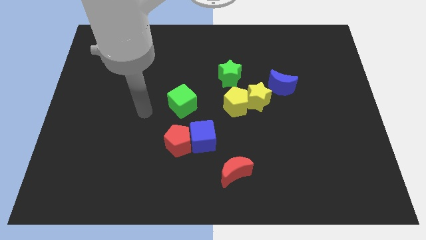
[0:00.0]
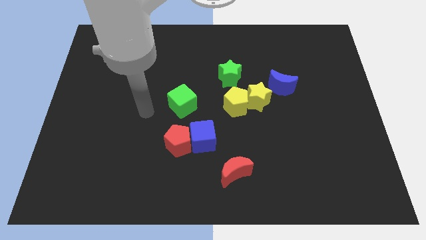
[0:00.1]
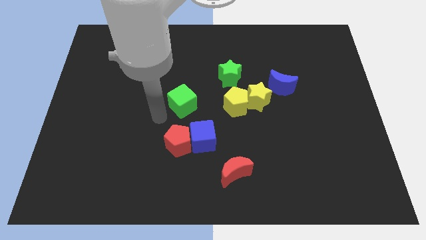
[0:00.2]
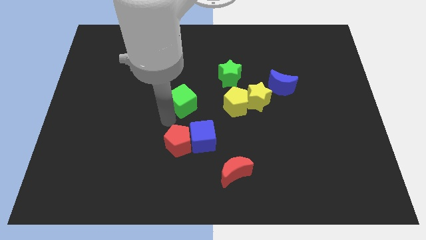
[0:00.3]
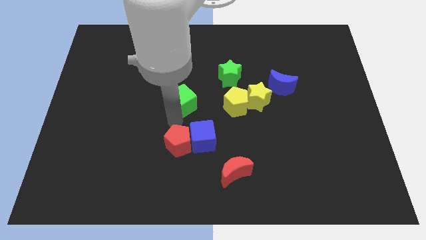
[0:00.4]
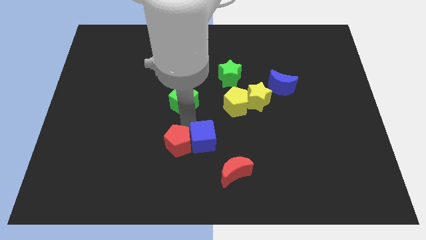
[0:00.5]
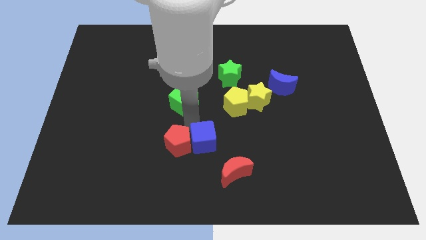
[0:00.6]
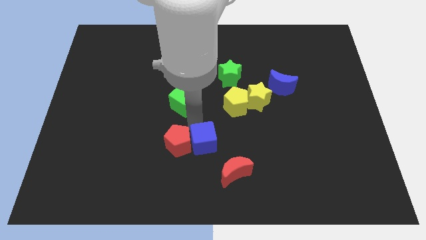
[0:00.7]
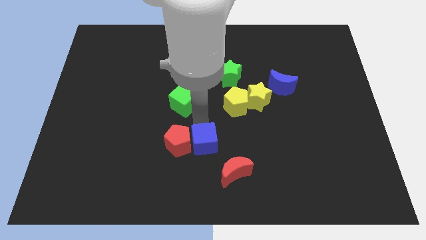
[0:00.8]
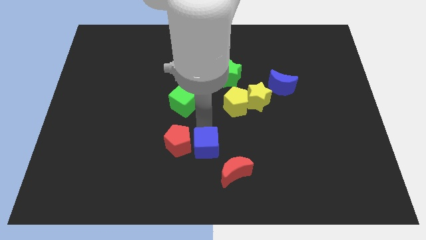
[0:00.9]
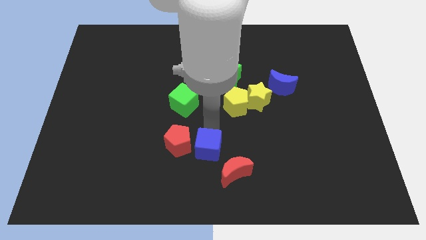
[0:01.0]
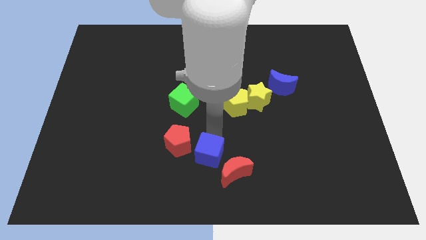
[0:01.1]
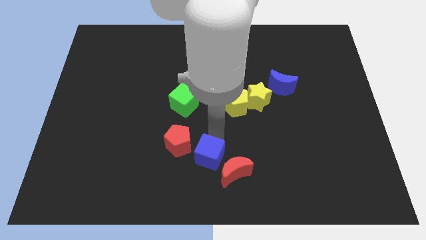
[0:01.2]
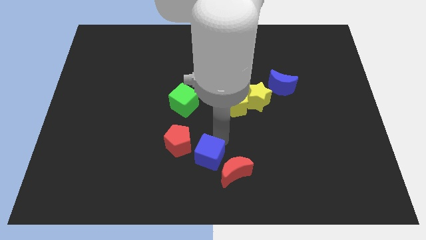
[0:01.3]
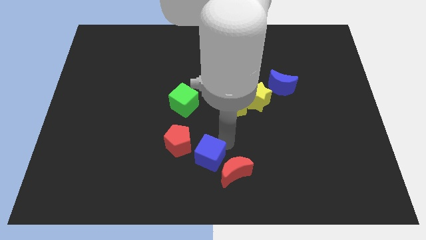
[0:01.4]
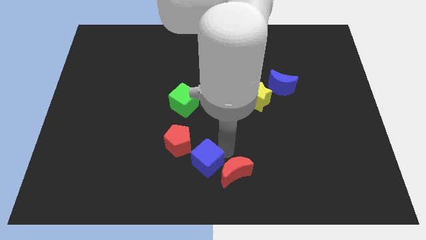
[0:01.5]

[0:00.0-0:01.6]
place the blue cube in between the red blocks

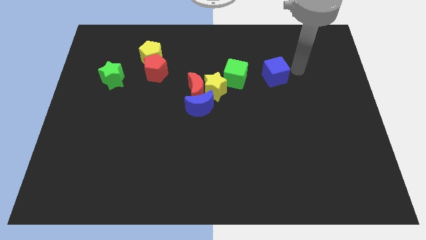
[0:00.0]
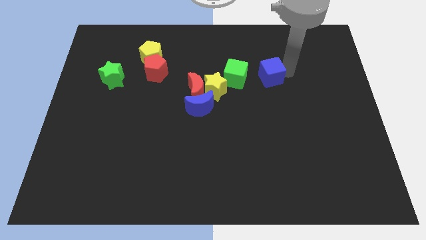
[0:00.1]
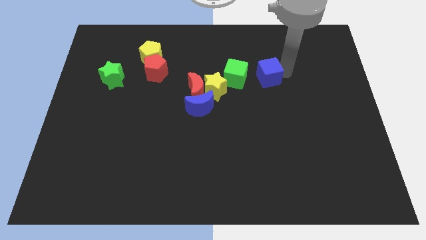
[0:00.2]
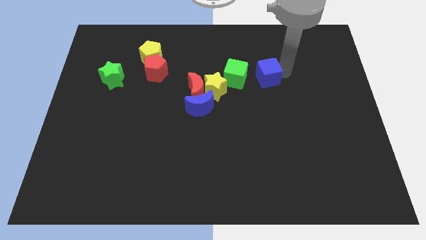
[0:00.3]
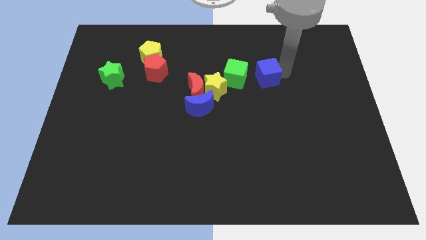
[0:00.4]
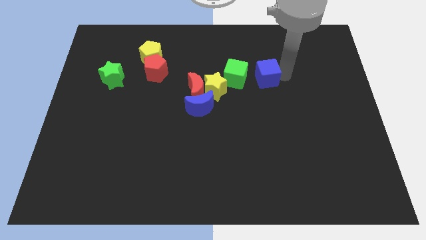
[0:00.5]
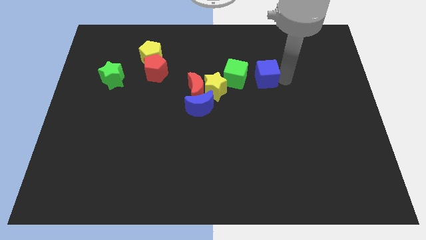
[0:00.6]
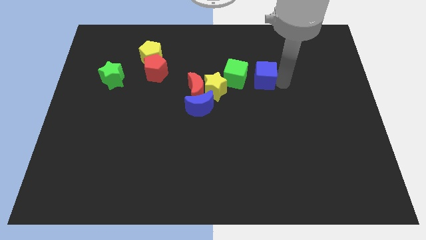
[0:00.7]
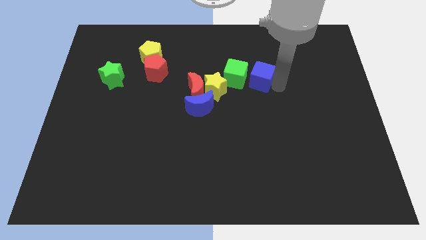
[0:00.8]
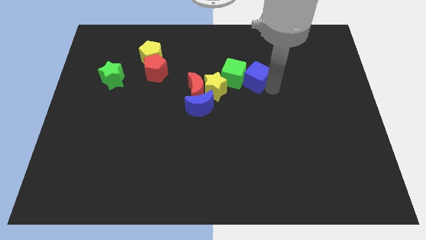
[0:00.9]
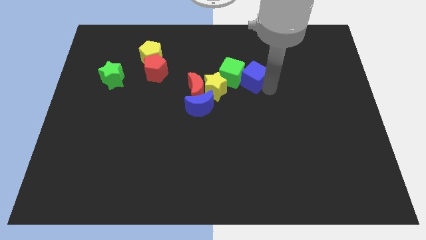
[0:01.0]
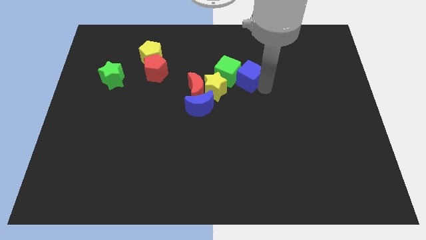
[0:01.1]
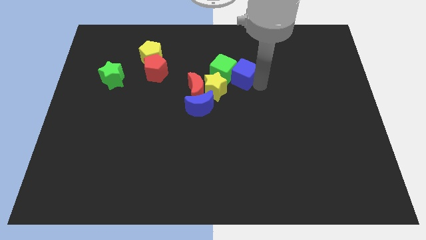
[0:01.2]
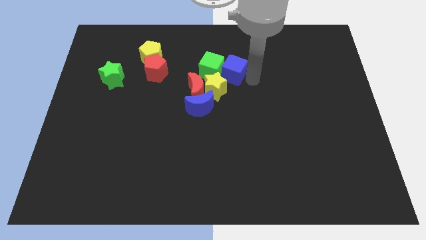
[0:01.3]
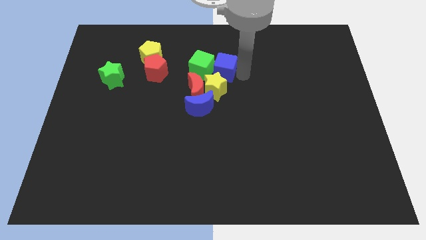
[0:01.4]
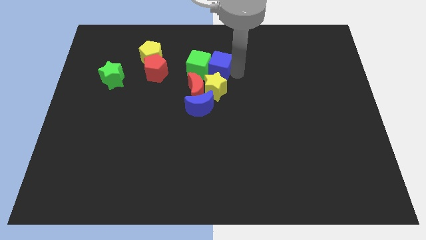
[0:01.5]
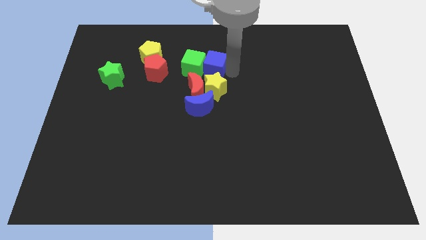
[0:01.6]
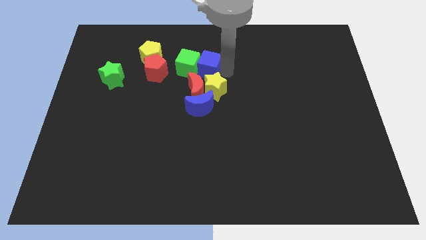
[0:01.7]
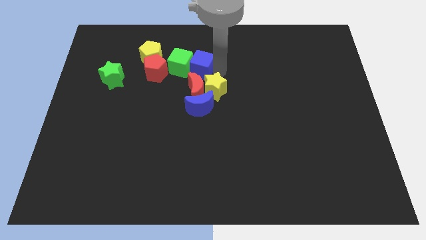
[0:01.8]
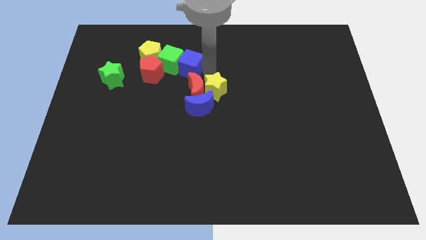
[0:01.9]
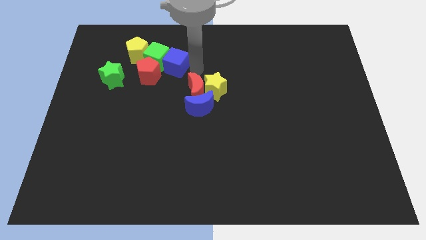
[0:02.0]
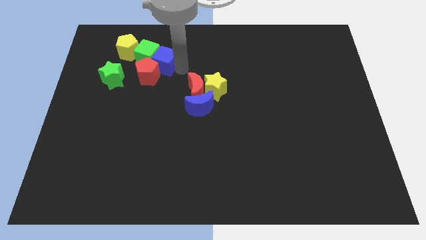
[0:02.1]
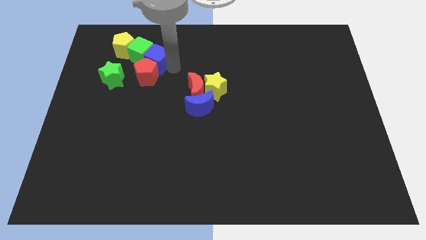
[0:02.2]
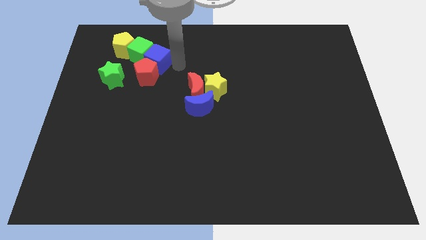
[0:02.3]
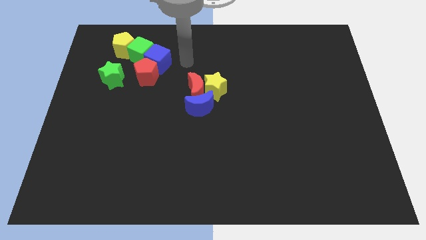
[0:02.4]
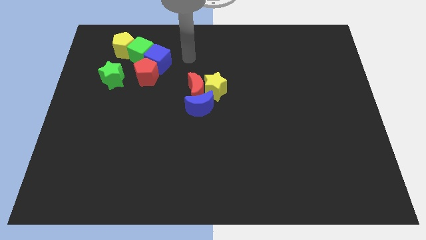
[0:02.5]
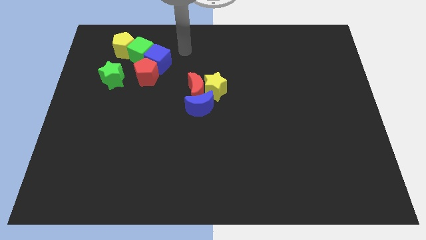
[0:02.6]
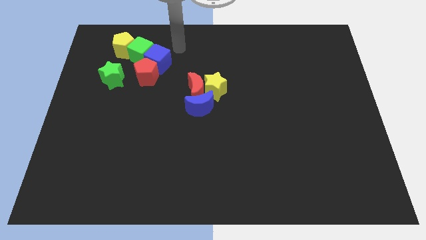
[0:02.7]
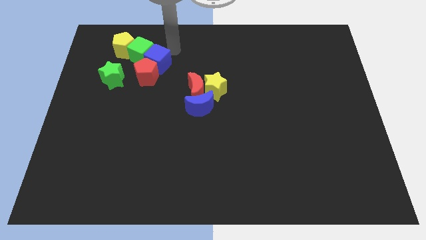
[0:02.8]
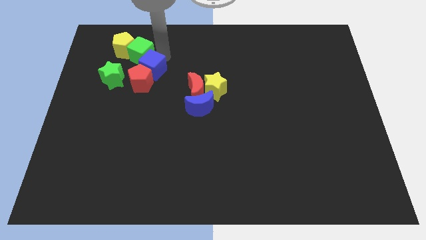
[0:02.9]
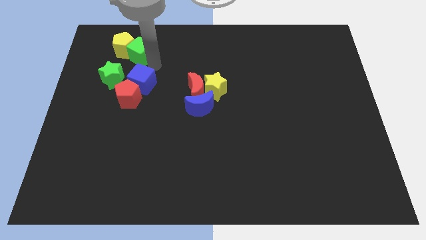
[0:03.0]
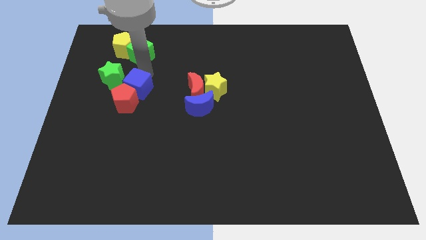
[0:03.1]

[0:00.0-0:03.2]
push blue cube into group of blocks

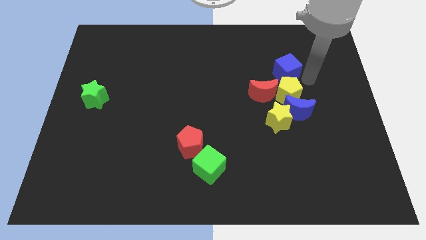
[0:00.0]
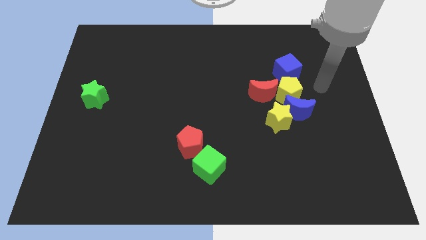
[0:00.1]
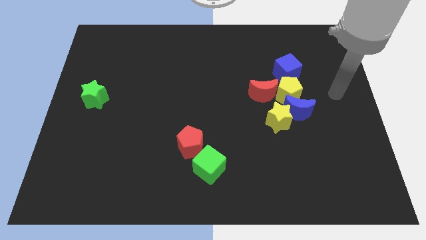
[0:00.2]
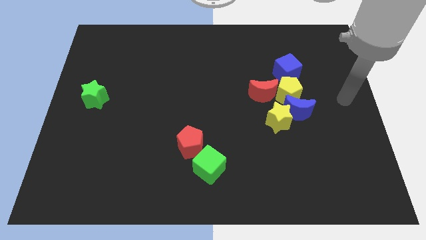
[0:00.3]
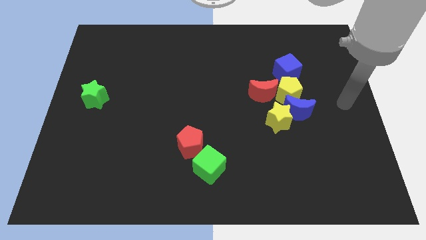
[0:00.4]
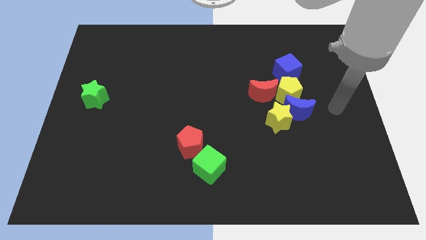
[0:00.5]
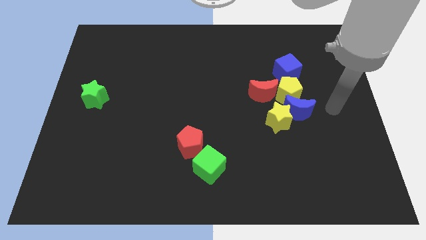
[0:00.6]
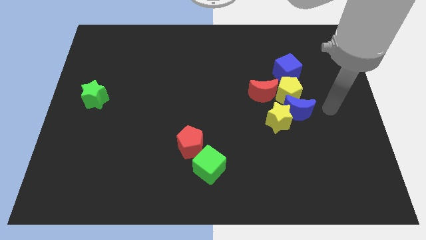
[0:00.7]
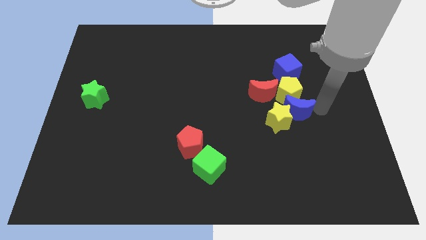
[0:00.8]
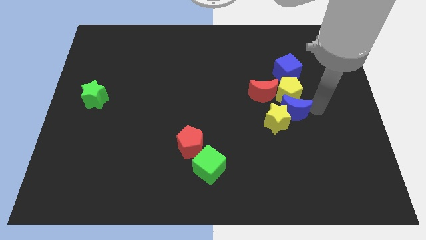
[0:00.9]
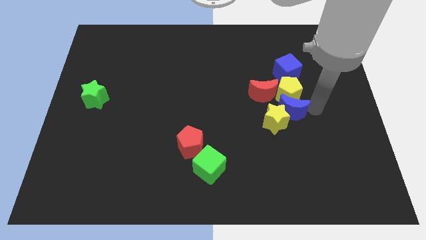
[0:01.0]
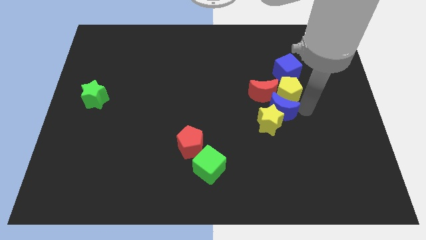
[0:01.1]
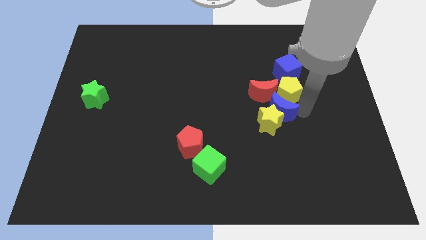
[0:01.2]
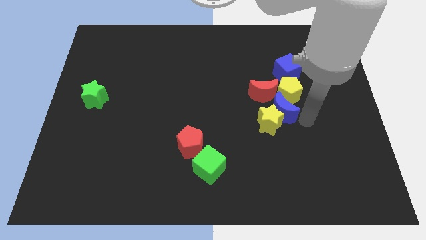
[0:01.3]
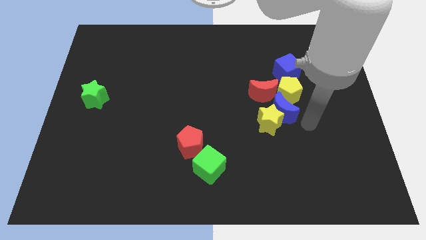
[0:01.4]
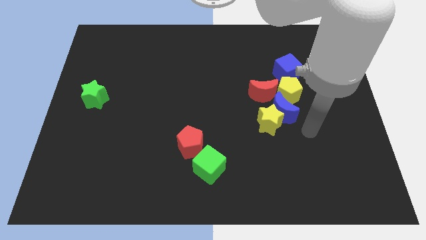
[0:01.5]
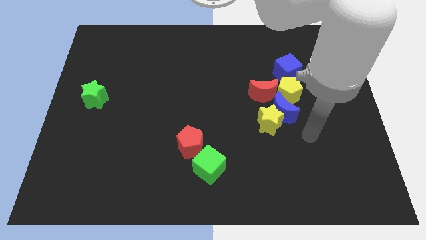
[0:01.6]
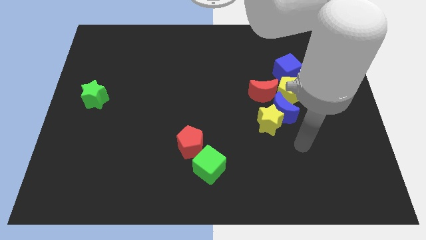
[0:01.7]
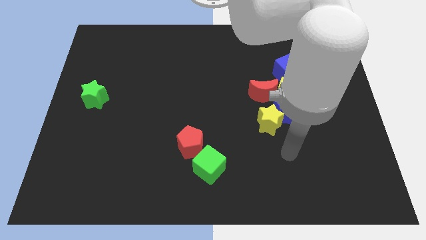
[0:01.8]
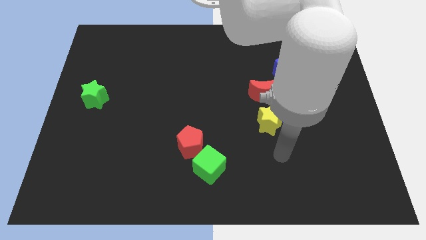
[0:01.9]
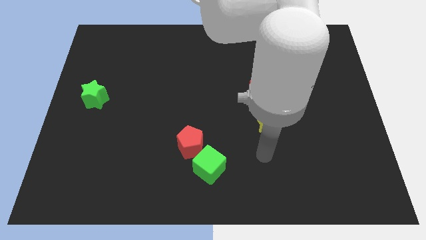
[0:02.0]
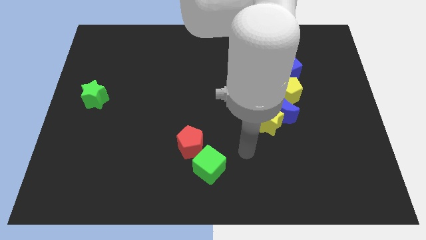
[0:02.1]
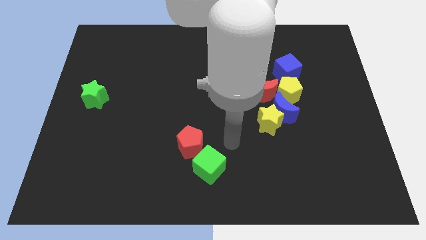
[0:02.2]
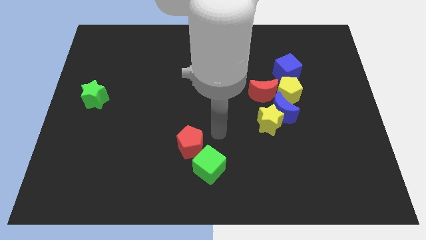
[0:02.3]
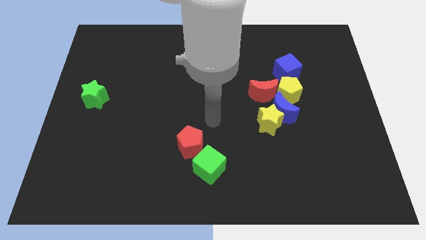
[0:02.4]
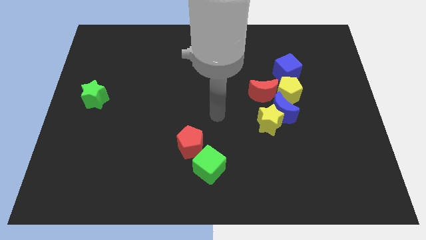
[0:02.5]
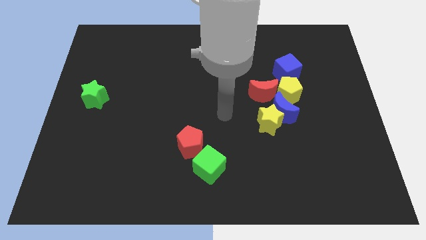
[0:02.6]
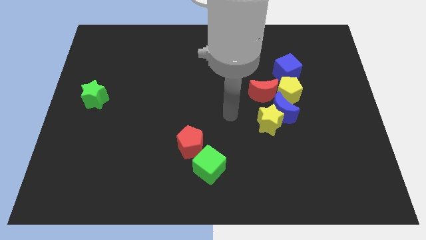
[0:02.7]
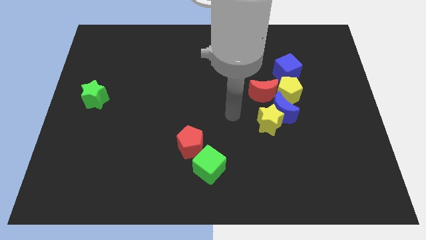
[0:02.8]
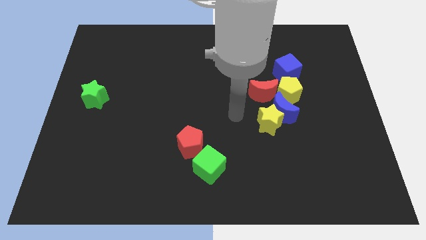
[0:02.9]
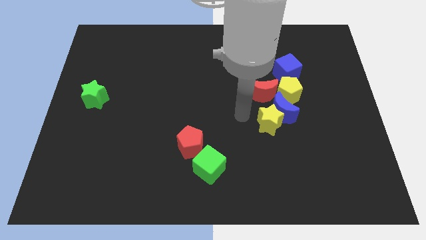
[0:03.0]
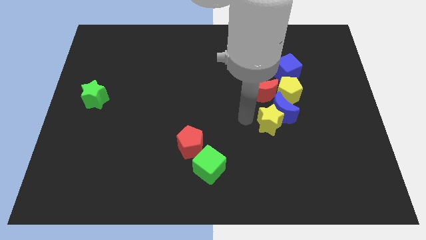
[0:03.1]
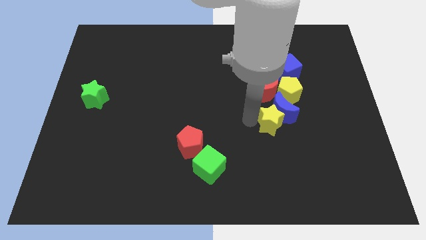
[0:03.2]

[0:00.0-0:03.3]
place the blue crescent in between the yellow blocks

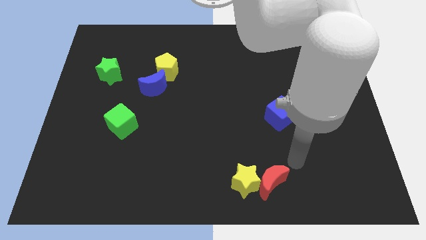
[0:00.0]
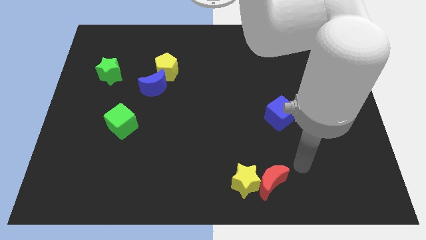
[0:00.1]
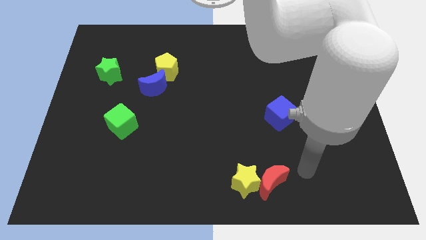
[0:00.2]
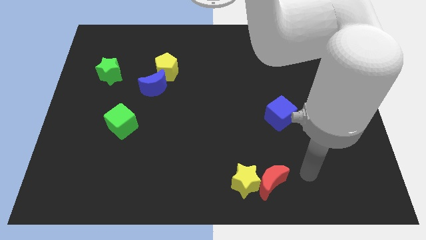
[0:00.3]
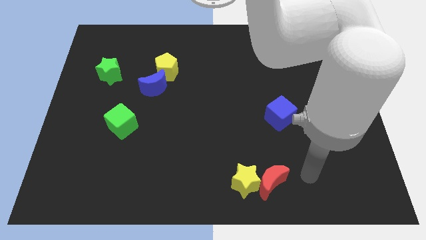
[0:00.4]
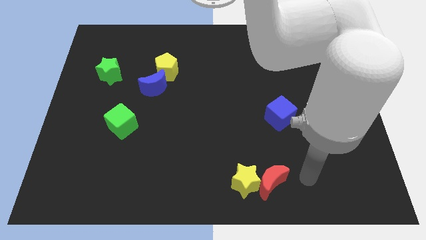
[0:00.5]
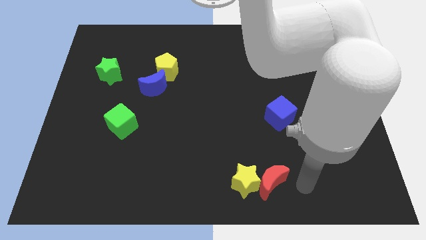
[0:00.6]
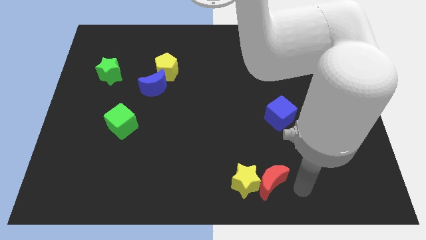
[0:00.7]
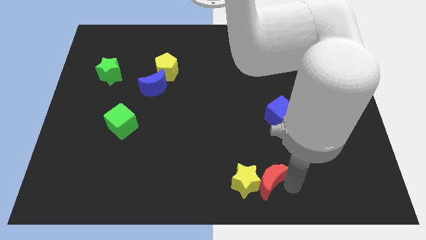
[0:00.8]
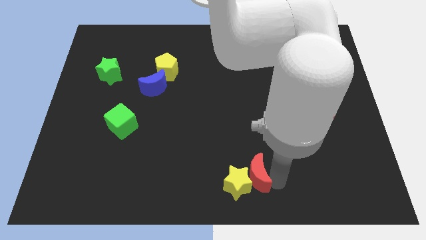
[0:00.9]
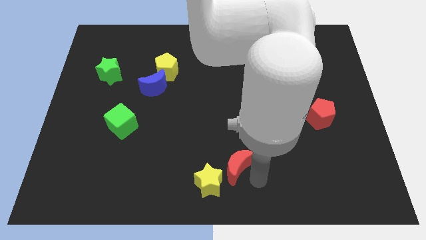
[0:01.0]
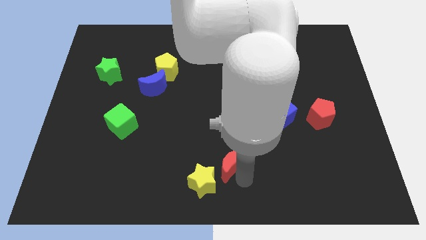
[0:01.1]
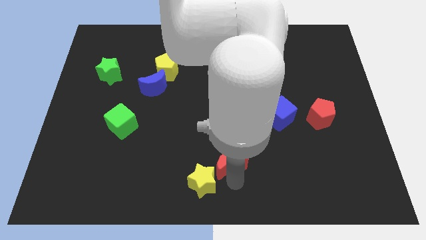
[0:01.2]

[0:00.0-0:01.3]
move red moon and yellow star slightly left
